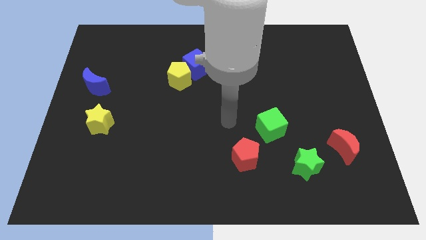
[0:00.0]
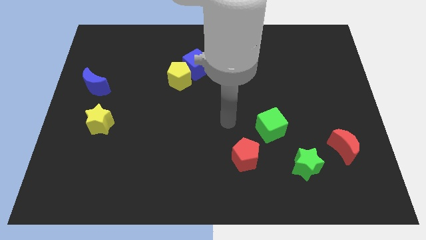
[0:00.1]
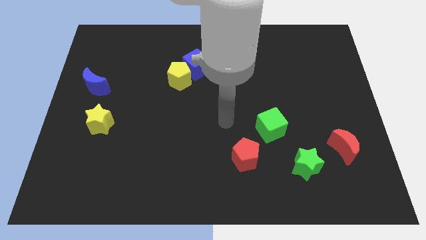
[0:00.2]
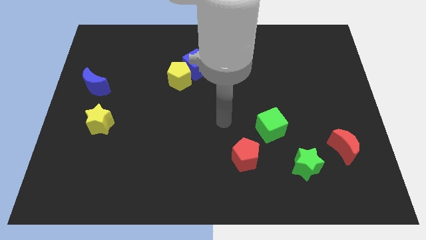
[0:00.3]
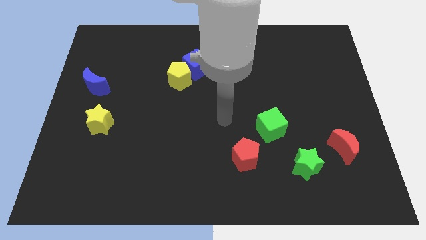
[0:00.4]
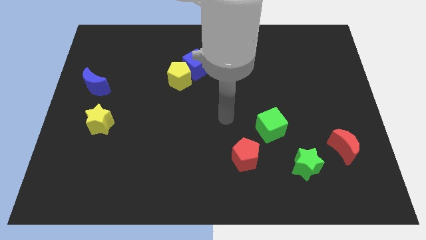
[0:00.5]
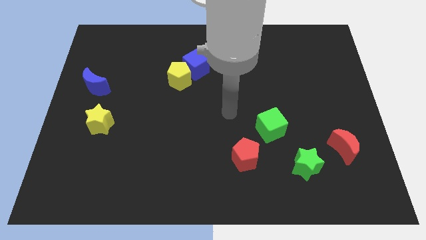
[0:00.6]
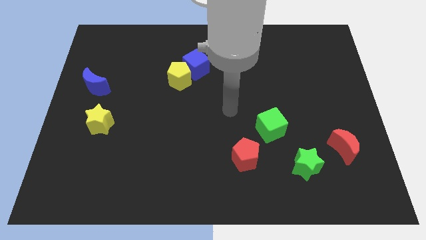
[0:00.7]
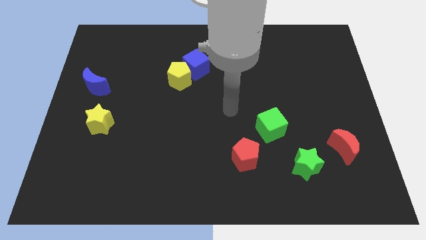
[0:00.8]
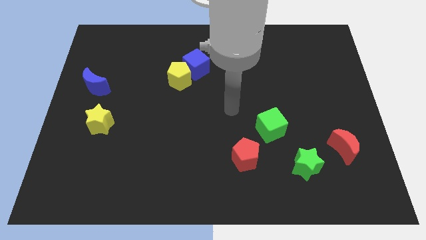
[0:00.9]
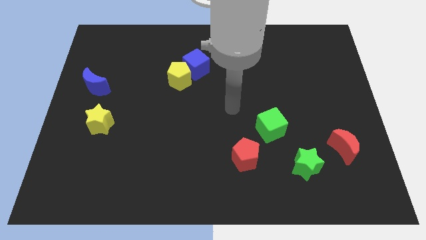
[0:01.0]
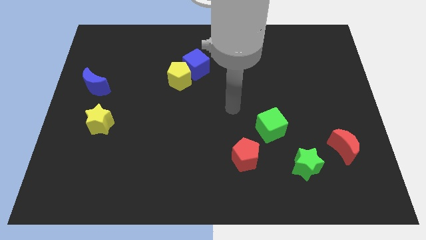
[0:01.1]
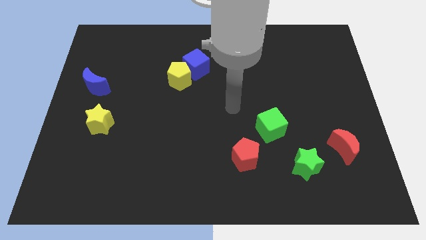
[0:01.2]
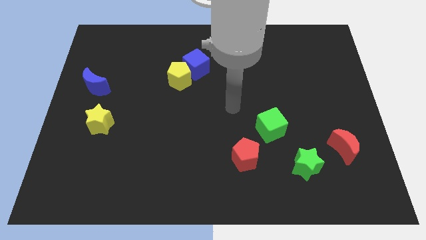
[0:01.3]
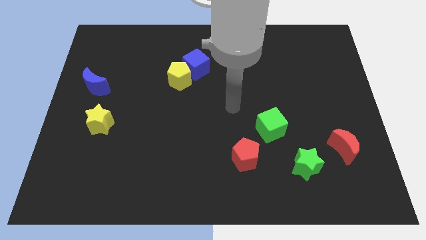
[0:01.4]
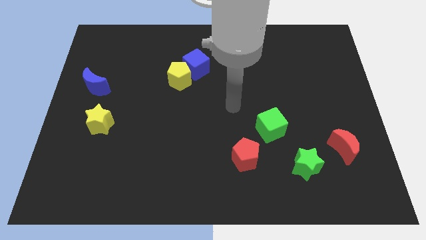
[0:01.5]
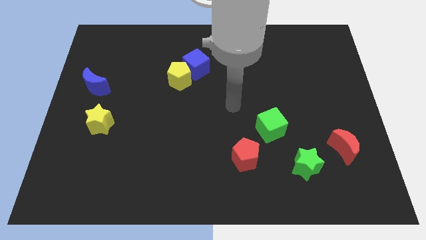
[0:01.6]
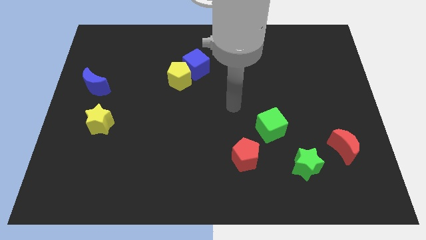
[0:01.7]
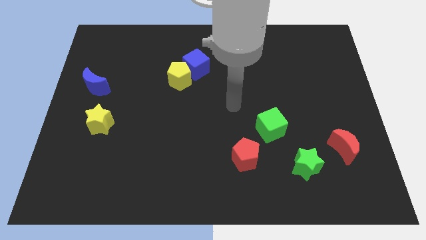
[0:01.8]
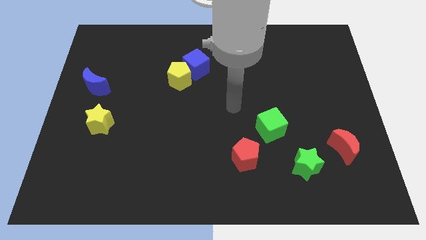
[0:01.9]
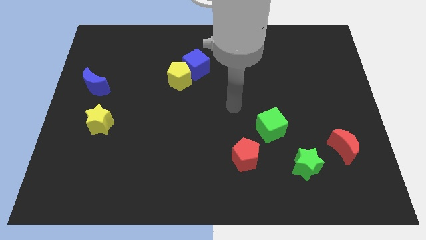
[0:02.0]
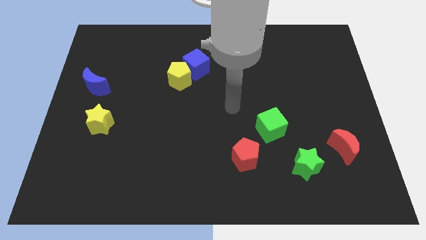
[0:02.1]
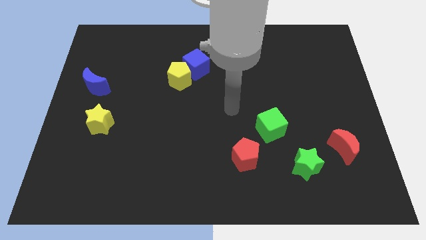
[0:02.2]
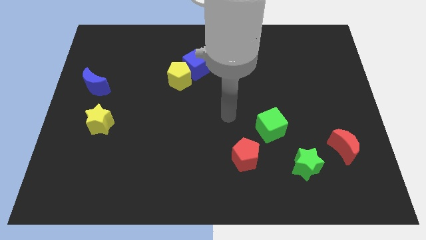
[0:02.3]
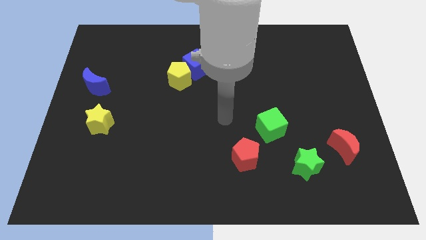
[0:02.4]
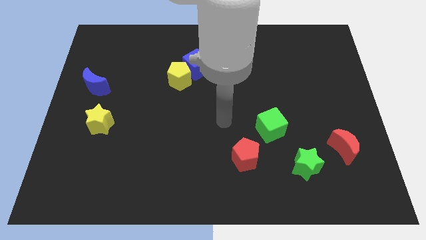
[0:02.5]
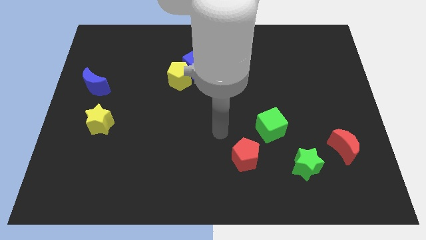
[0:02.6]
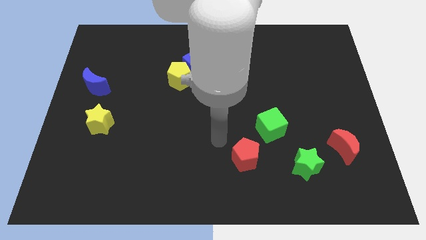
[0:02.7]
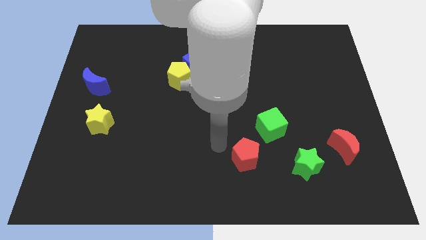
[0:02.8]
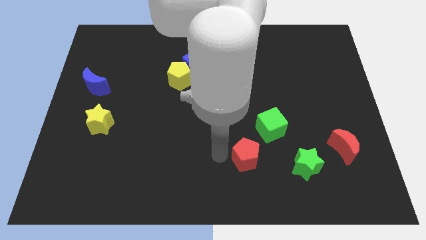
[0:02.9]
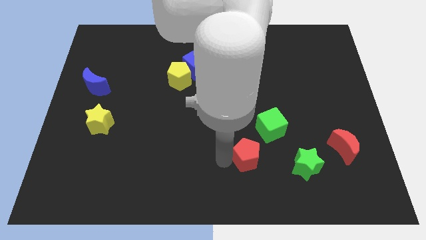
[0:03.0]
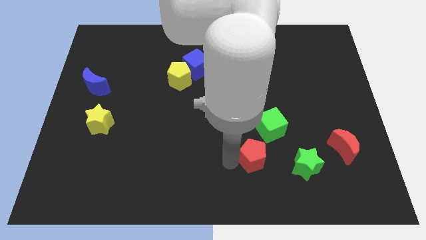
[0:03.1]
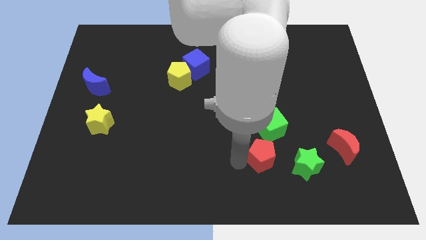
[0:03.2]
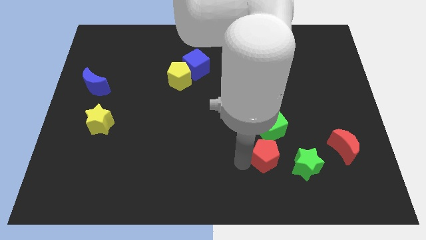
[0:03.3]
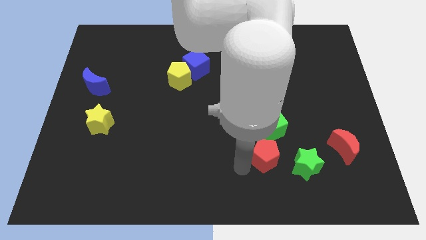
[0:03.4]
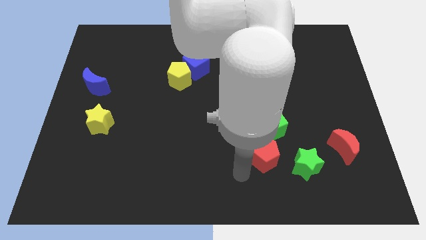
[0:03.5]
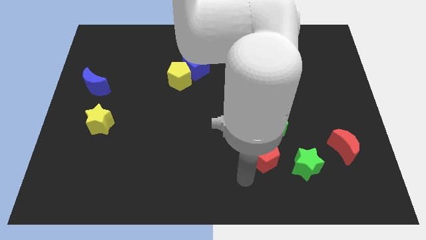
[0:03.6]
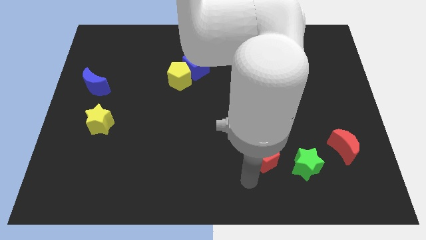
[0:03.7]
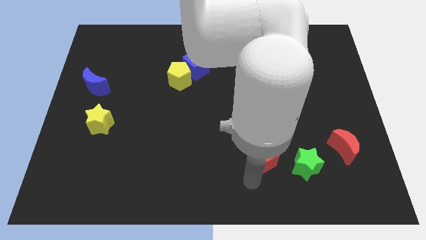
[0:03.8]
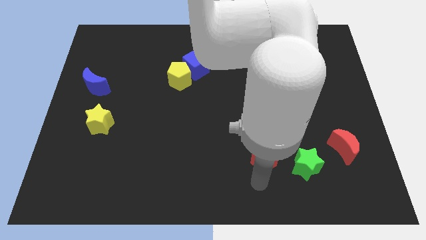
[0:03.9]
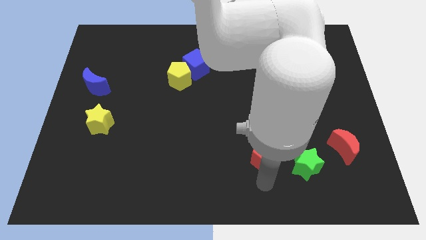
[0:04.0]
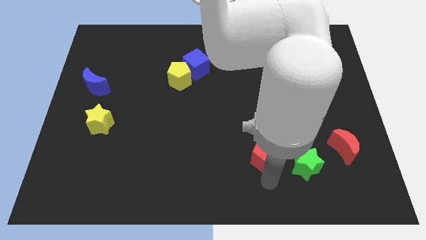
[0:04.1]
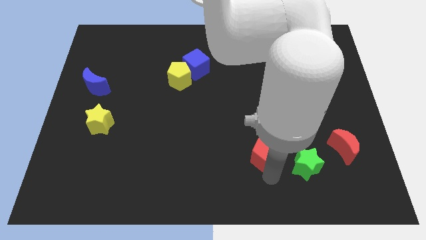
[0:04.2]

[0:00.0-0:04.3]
push the red pentagon towards the green cube

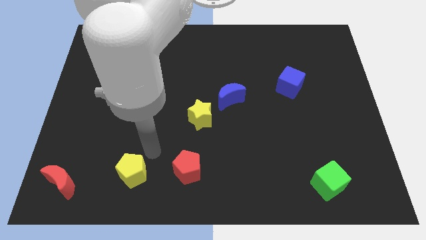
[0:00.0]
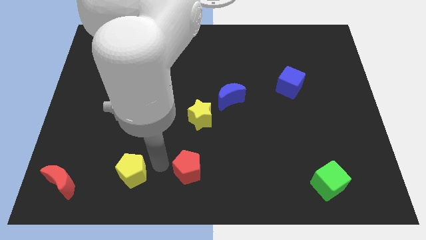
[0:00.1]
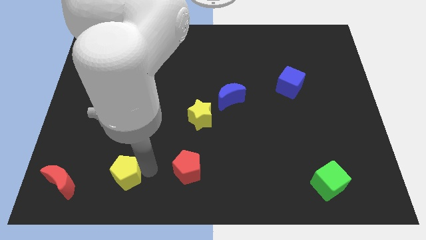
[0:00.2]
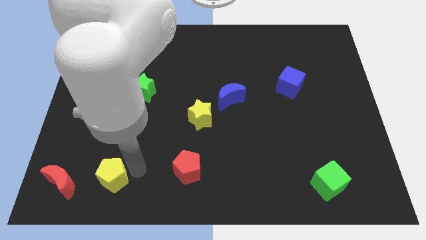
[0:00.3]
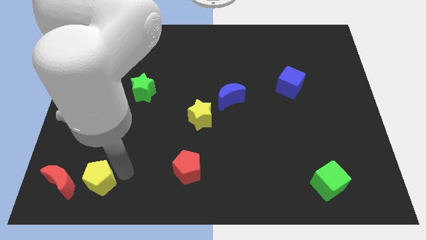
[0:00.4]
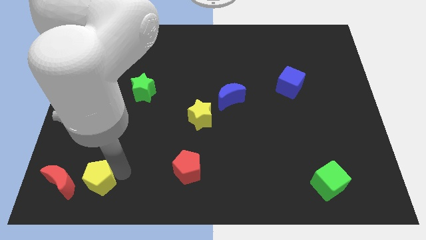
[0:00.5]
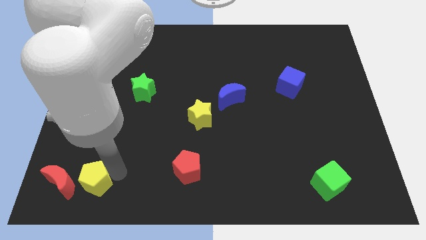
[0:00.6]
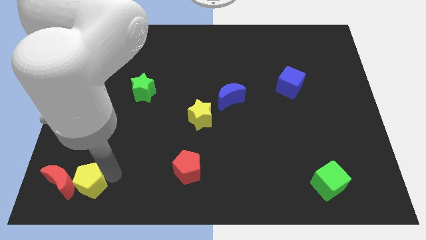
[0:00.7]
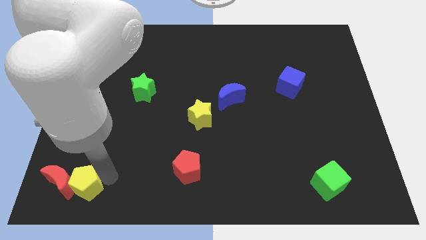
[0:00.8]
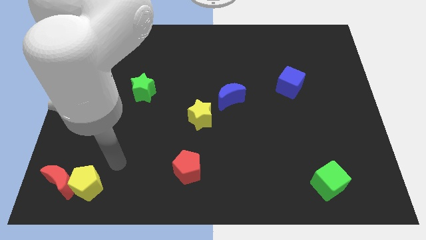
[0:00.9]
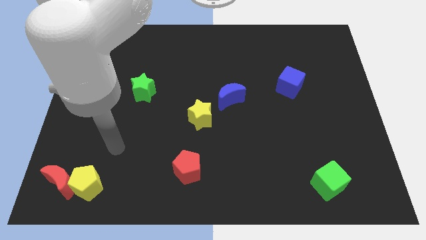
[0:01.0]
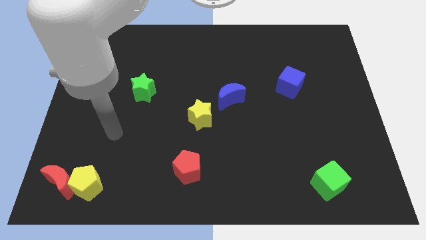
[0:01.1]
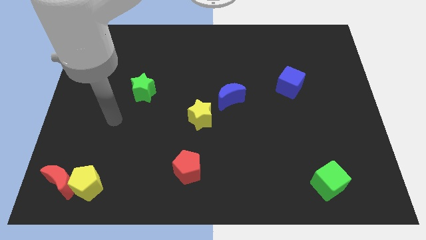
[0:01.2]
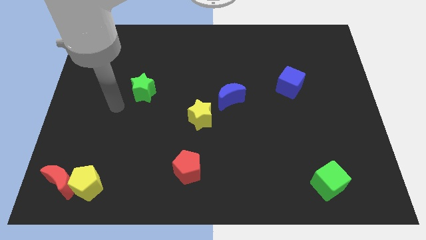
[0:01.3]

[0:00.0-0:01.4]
push the yellow pentagon to the right of the red crescent

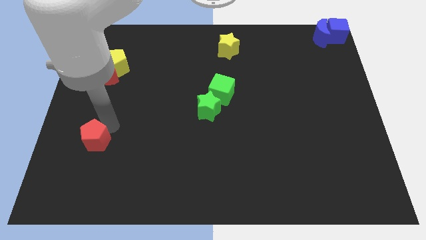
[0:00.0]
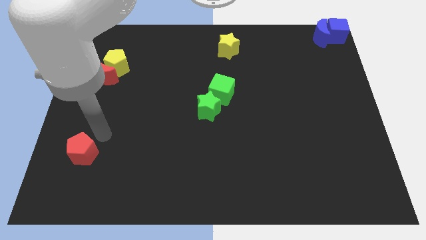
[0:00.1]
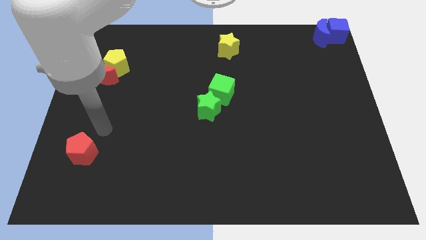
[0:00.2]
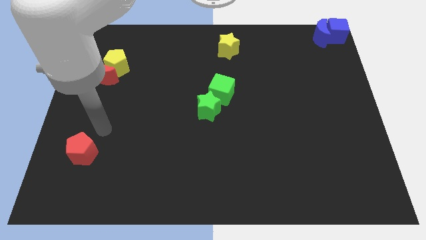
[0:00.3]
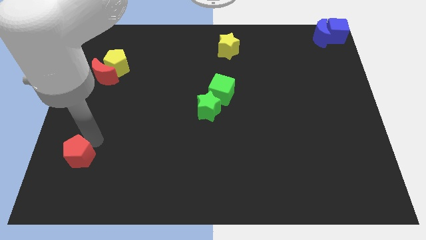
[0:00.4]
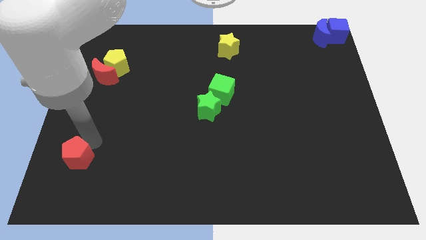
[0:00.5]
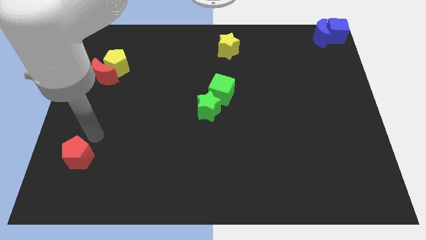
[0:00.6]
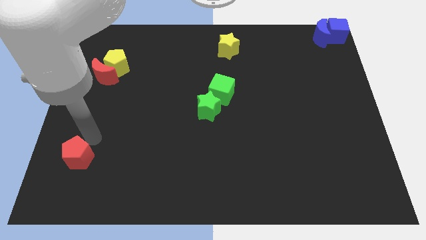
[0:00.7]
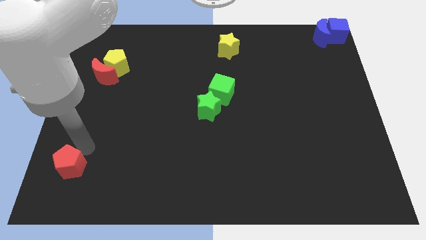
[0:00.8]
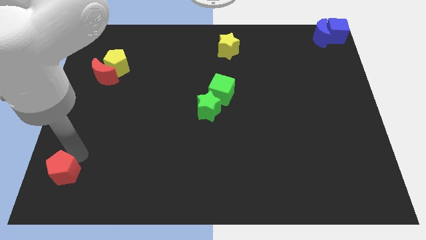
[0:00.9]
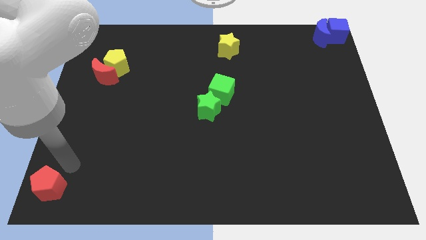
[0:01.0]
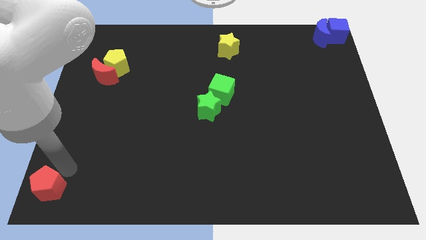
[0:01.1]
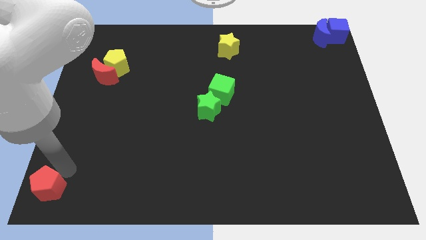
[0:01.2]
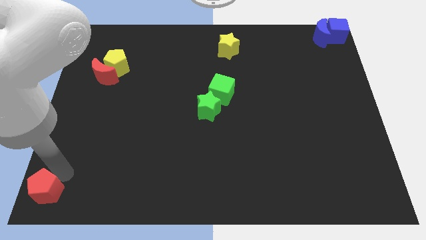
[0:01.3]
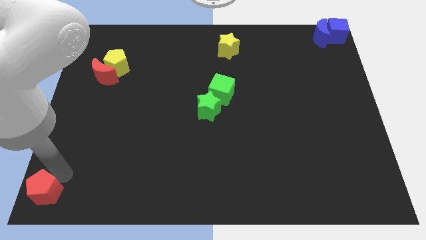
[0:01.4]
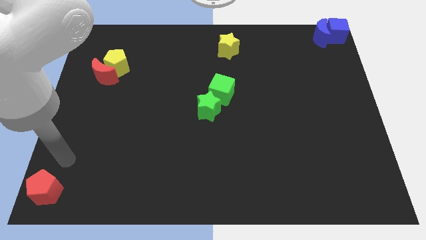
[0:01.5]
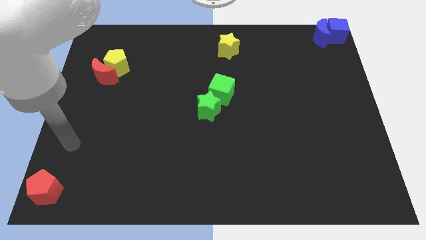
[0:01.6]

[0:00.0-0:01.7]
move the red pentagon to the bottom left of the board

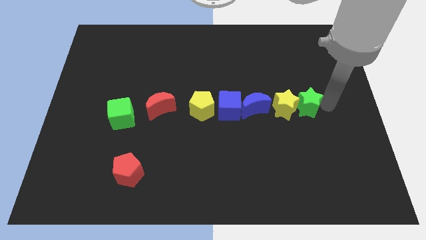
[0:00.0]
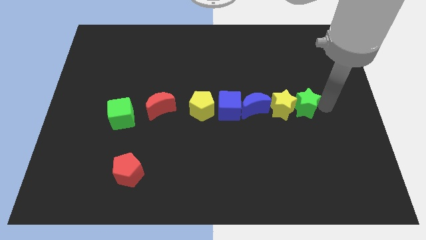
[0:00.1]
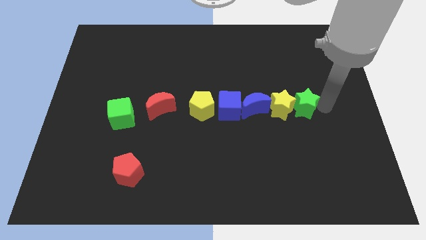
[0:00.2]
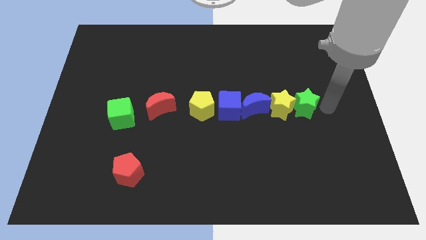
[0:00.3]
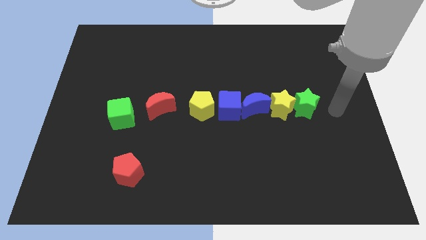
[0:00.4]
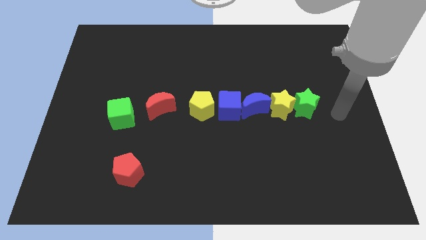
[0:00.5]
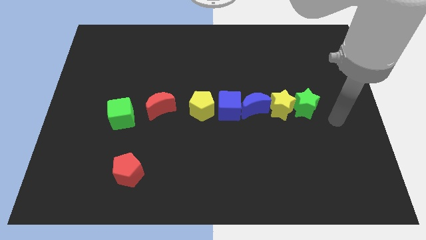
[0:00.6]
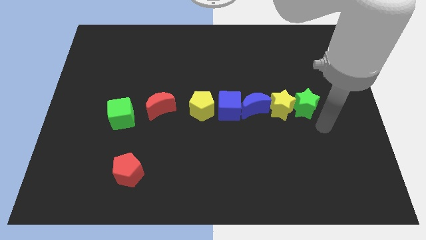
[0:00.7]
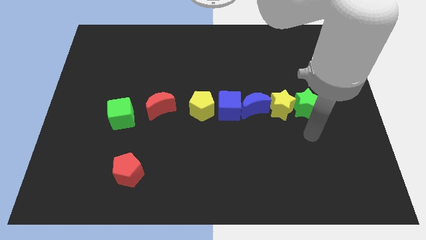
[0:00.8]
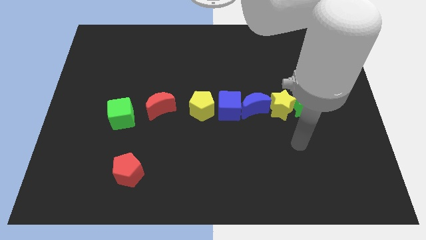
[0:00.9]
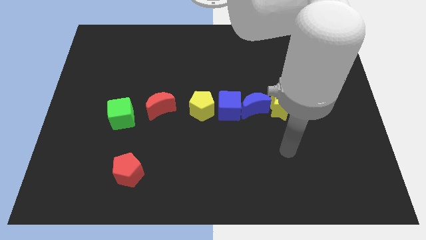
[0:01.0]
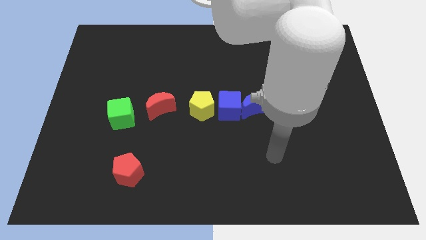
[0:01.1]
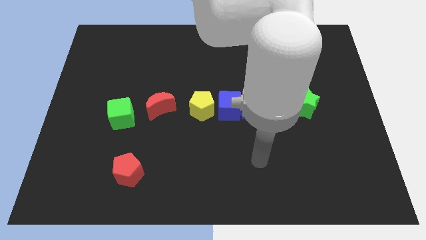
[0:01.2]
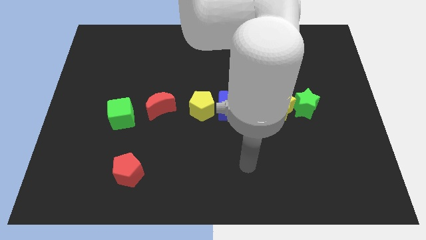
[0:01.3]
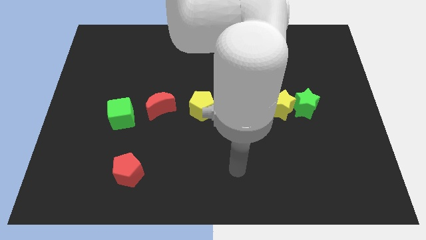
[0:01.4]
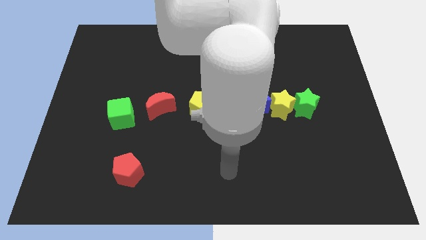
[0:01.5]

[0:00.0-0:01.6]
move your arm away from the green star
